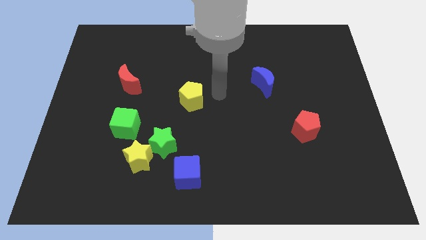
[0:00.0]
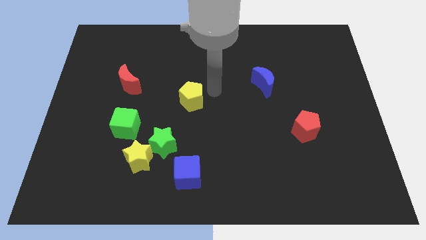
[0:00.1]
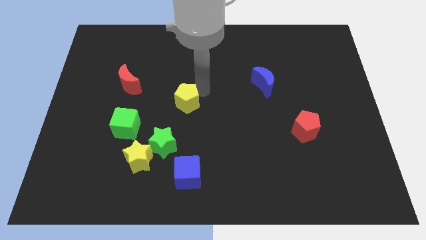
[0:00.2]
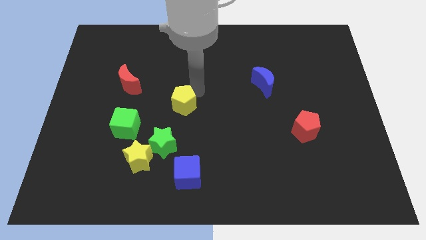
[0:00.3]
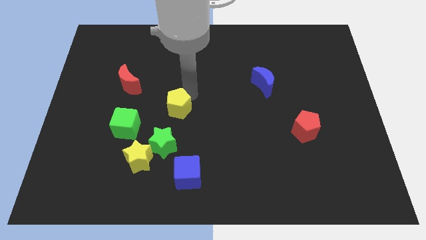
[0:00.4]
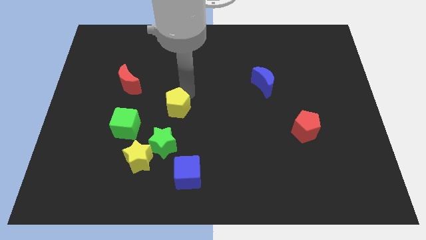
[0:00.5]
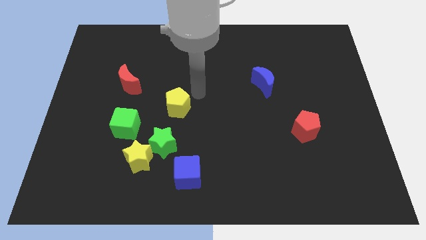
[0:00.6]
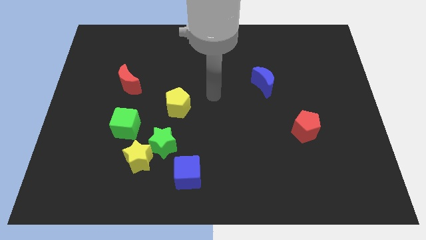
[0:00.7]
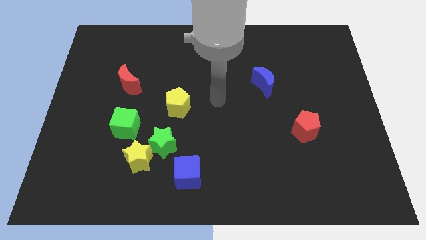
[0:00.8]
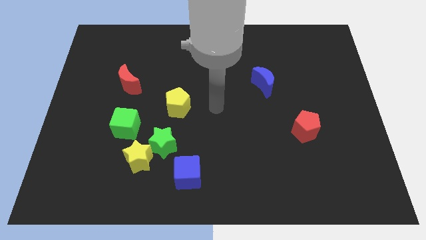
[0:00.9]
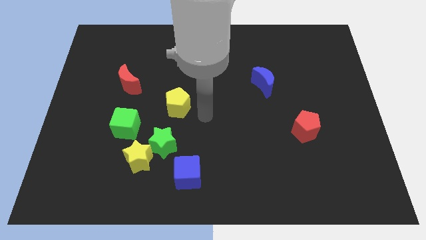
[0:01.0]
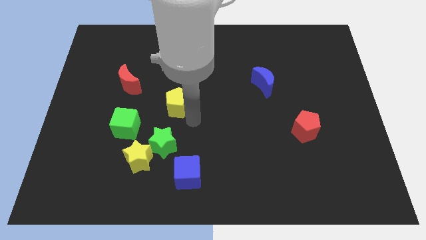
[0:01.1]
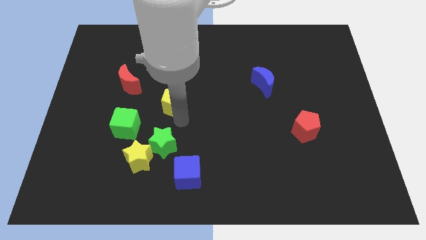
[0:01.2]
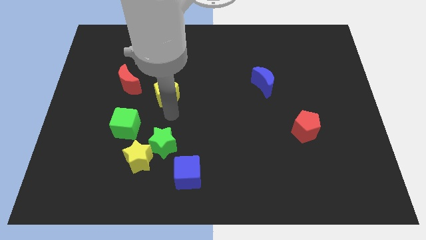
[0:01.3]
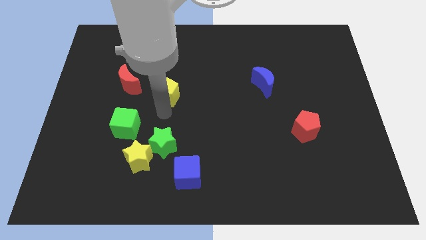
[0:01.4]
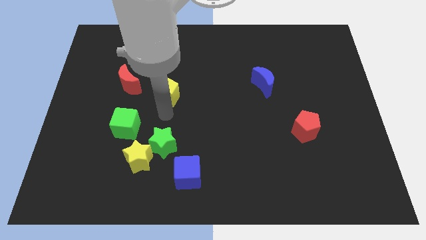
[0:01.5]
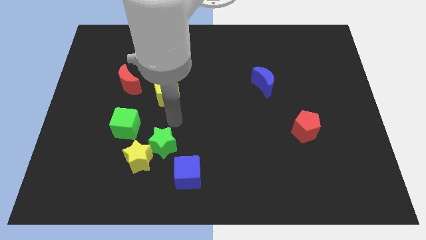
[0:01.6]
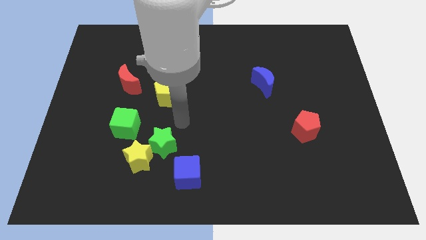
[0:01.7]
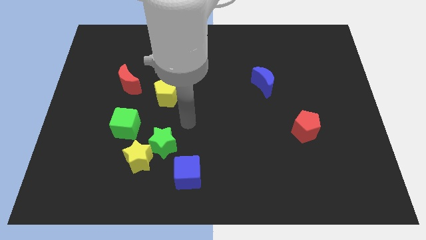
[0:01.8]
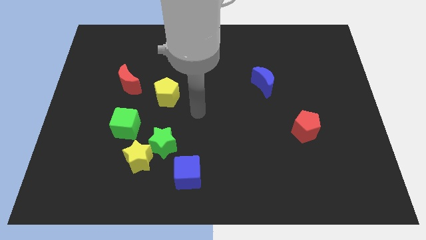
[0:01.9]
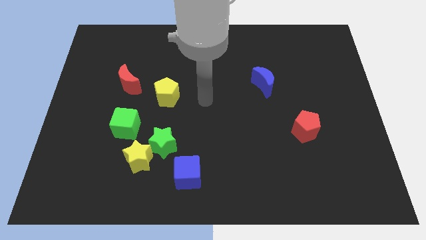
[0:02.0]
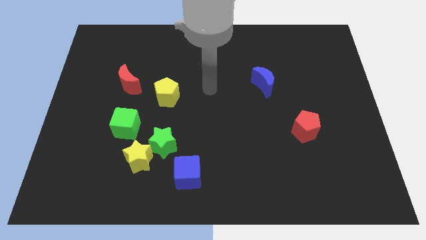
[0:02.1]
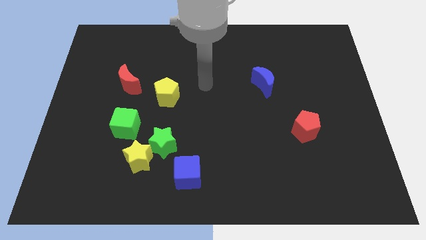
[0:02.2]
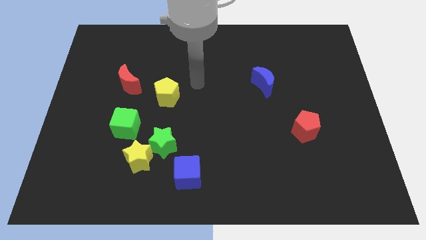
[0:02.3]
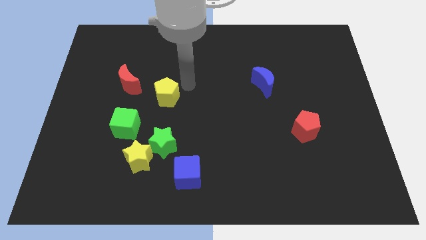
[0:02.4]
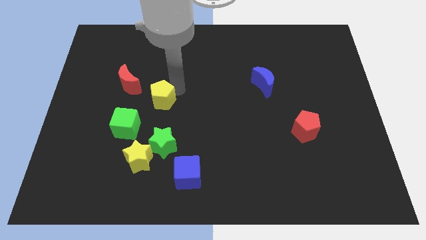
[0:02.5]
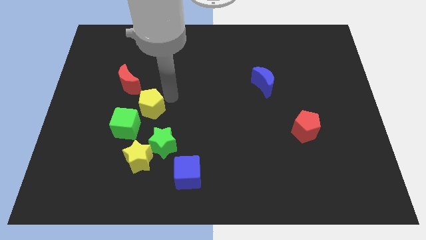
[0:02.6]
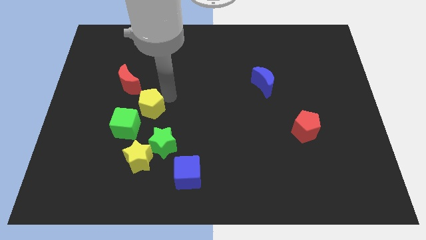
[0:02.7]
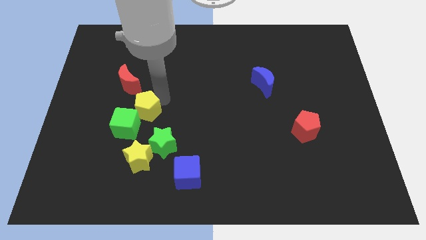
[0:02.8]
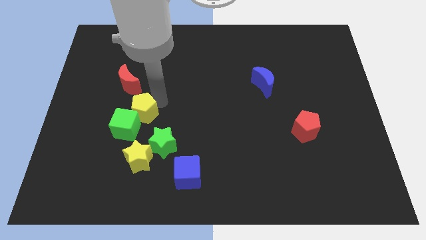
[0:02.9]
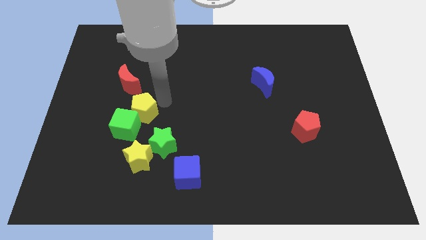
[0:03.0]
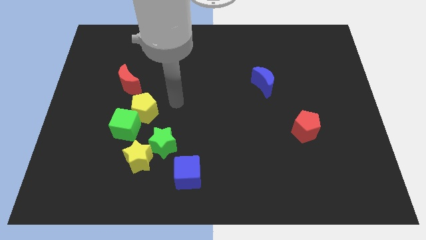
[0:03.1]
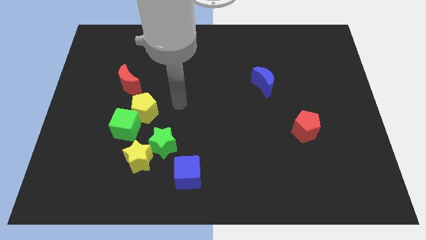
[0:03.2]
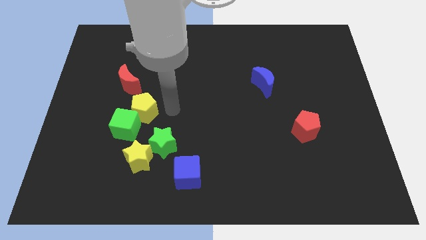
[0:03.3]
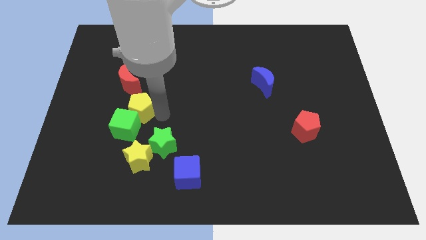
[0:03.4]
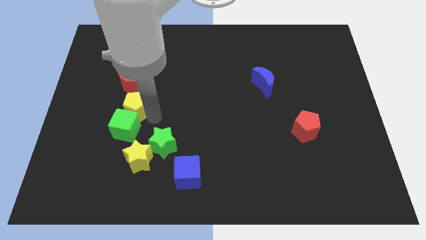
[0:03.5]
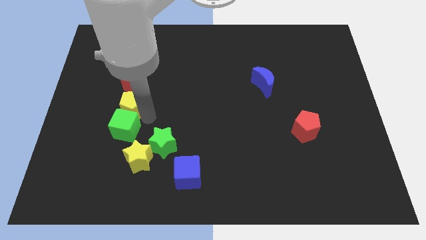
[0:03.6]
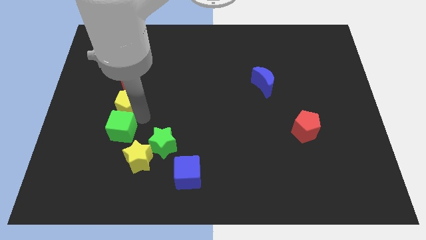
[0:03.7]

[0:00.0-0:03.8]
push the yellow pentagon to the top side of the green cube

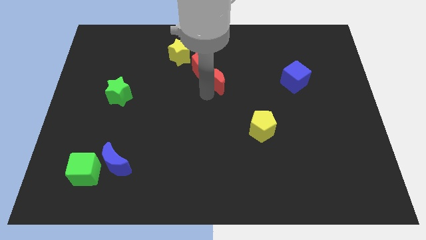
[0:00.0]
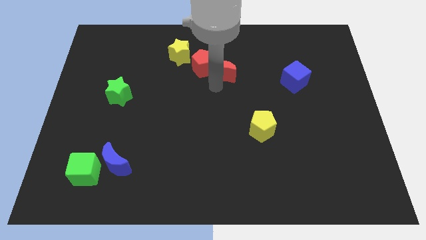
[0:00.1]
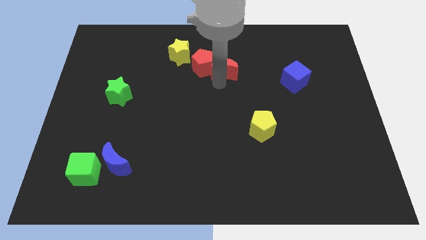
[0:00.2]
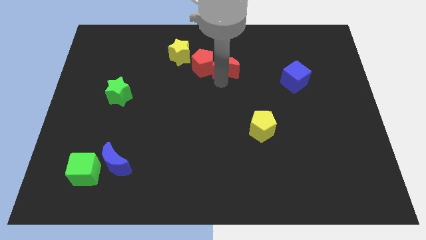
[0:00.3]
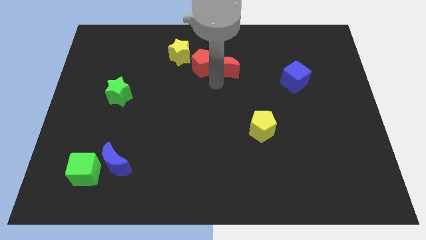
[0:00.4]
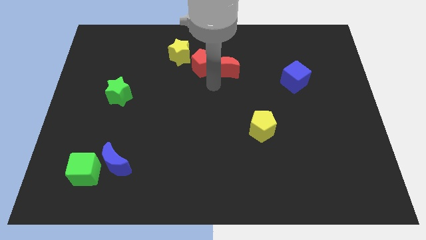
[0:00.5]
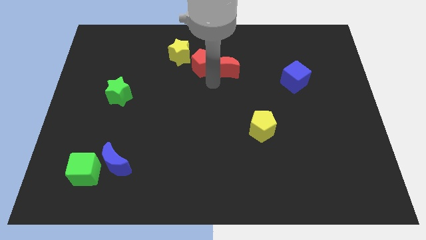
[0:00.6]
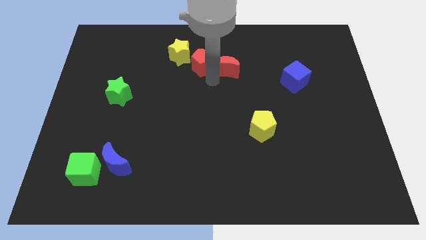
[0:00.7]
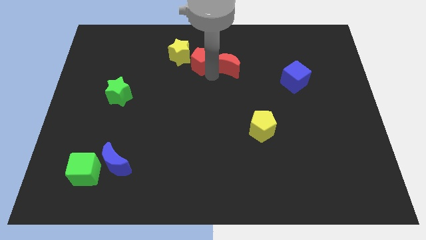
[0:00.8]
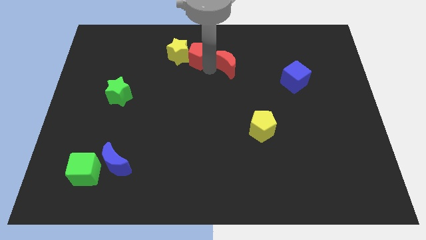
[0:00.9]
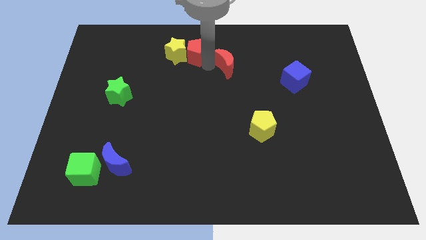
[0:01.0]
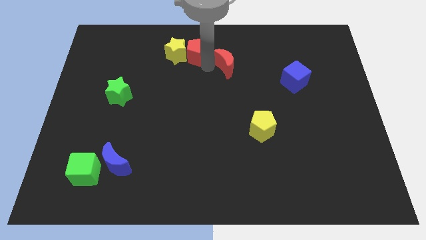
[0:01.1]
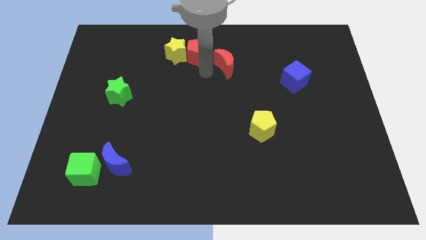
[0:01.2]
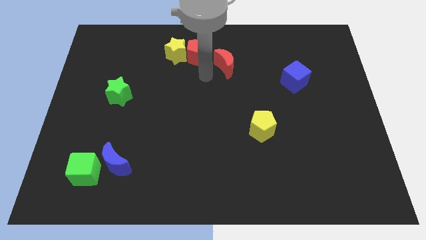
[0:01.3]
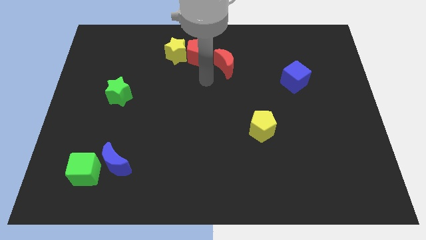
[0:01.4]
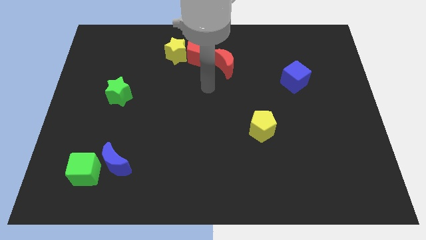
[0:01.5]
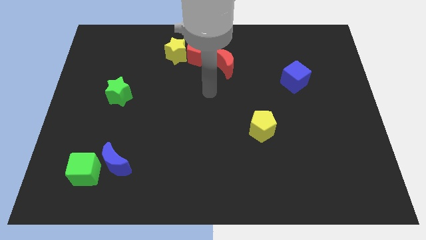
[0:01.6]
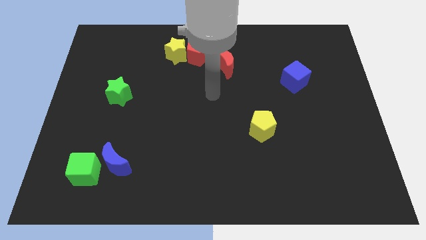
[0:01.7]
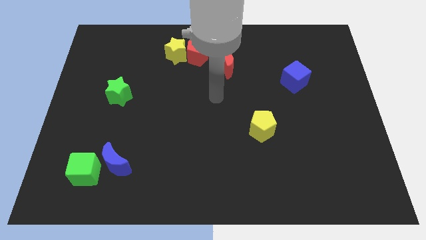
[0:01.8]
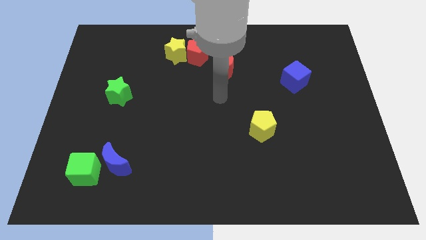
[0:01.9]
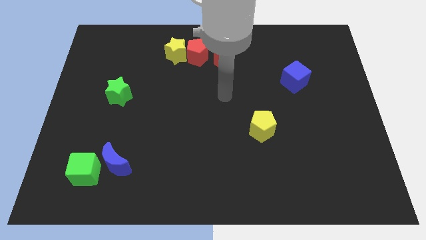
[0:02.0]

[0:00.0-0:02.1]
place red pentagon beside yellow star on top center of the board

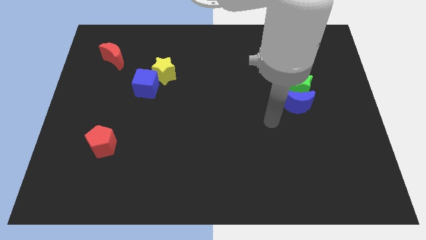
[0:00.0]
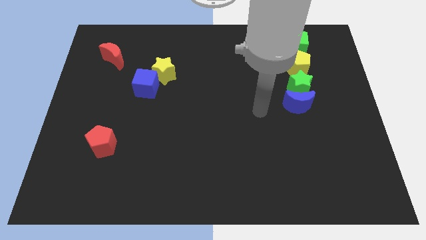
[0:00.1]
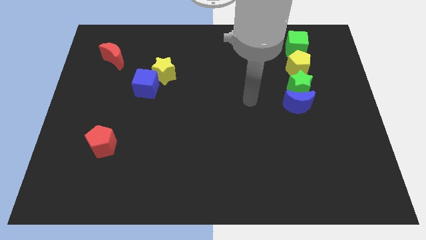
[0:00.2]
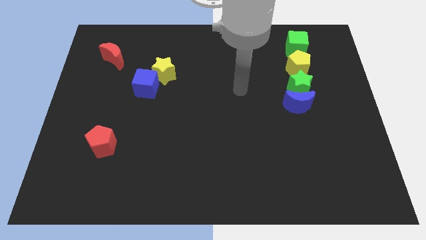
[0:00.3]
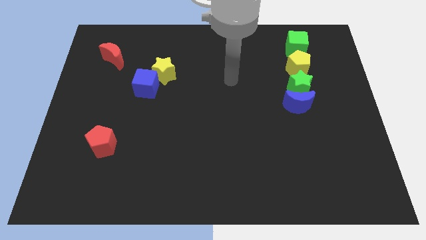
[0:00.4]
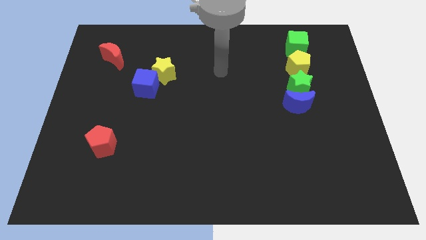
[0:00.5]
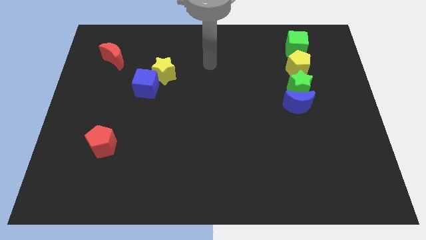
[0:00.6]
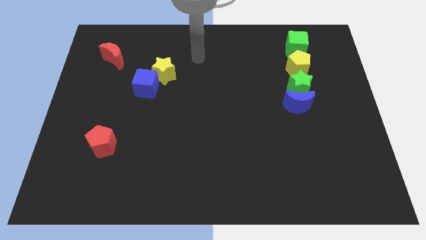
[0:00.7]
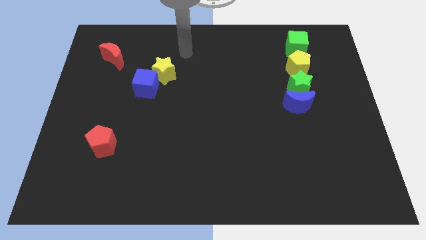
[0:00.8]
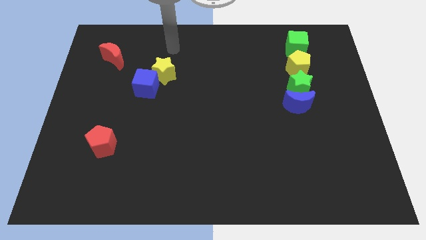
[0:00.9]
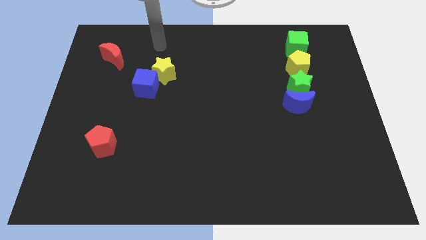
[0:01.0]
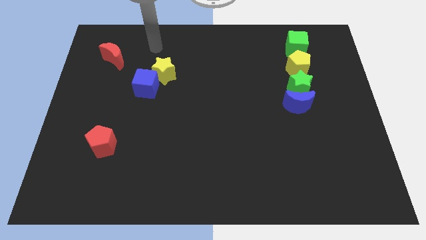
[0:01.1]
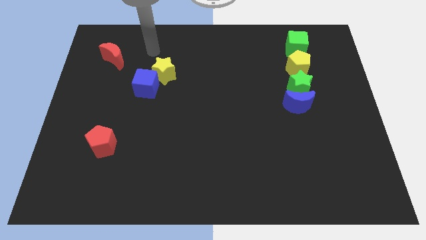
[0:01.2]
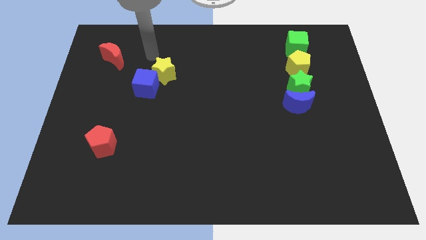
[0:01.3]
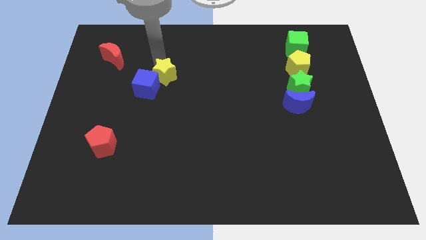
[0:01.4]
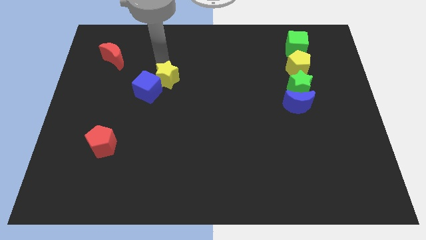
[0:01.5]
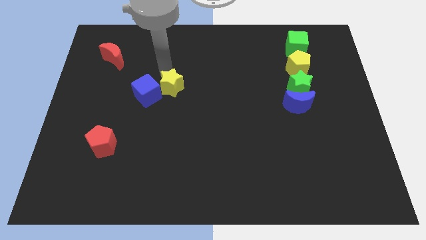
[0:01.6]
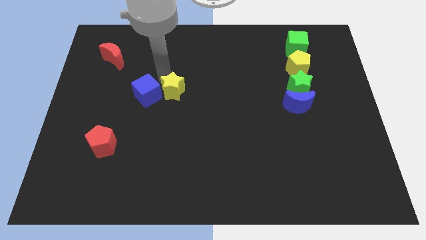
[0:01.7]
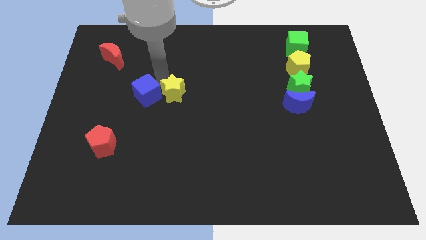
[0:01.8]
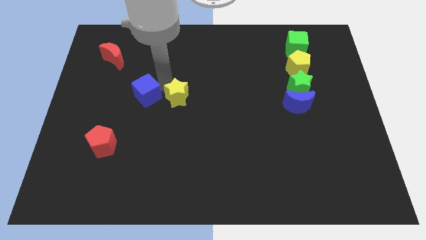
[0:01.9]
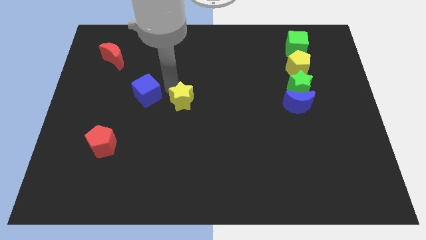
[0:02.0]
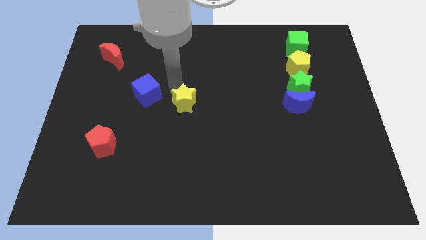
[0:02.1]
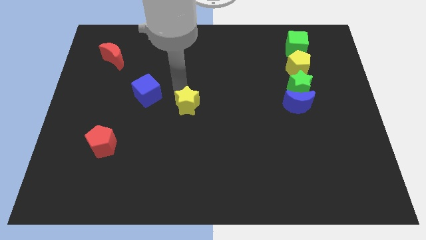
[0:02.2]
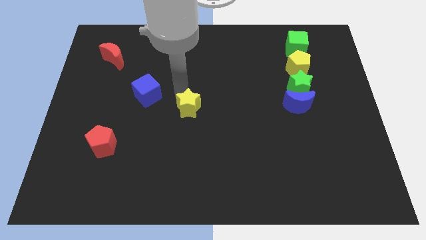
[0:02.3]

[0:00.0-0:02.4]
separate the yellow star from blue cube

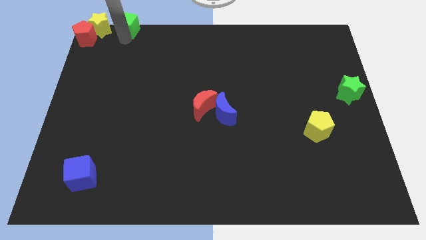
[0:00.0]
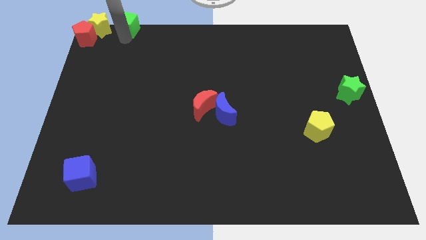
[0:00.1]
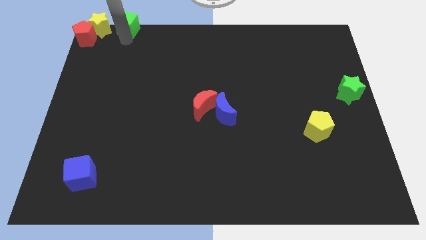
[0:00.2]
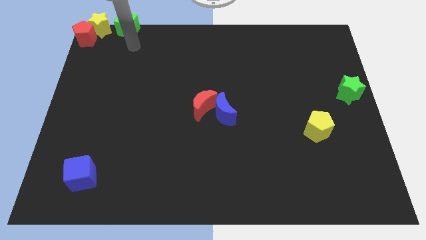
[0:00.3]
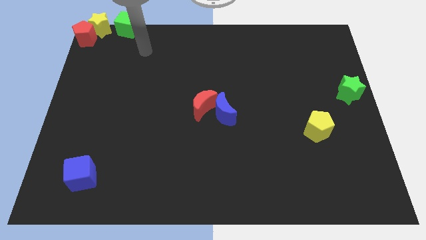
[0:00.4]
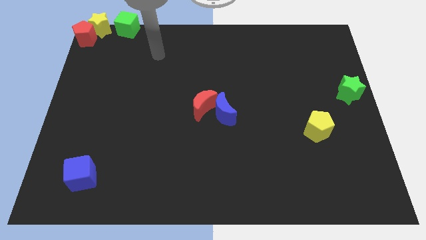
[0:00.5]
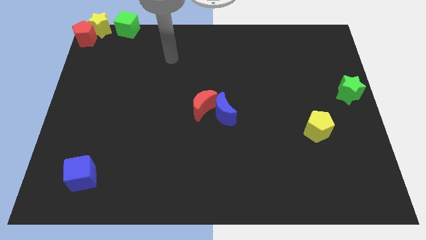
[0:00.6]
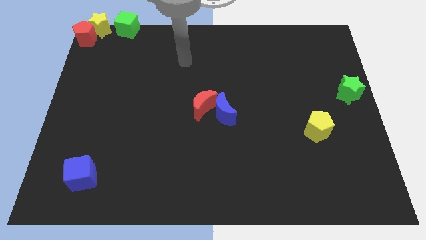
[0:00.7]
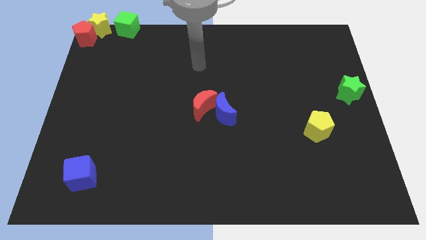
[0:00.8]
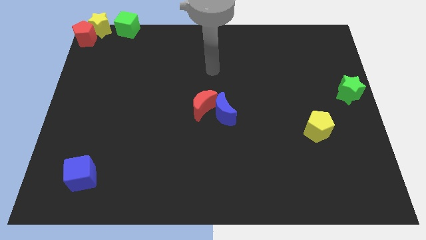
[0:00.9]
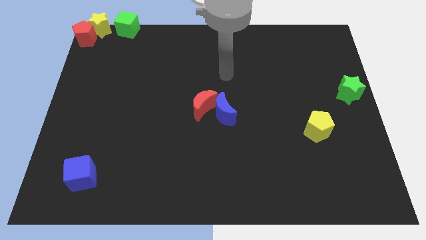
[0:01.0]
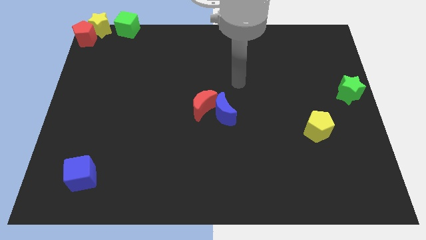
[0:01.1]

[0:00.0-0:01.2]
point your arm to the top right side of the blue moon
